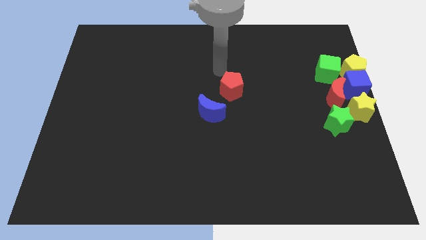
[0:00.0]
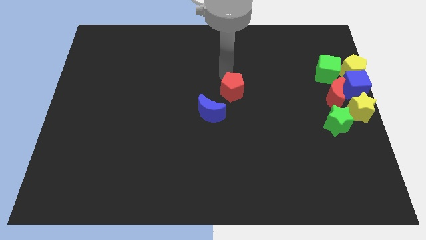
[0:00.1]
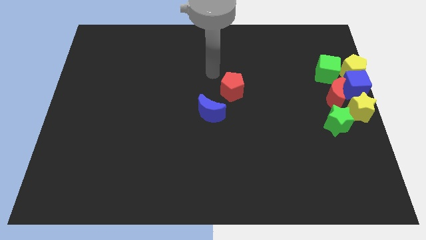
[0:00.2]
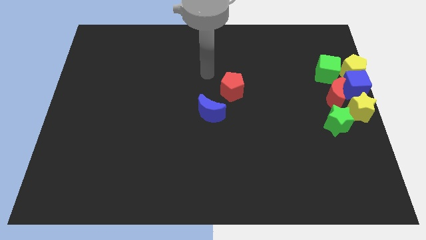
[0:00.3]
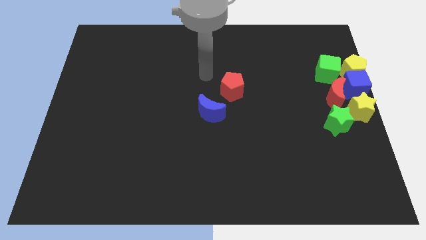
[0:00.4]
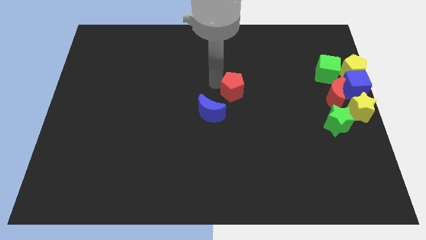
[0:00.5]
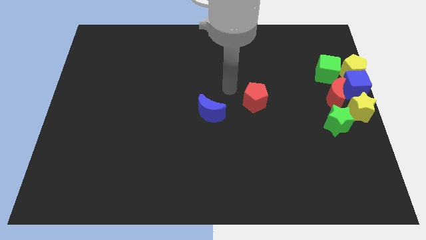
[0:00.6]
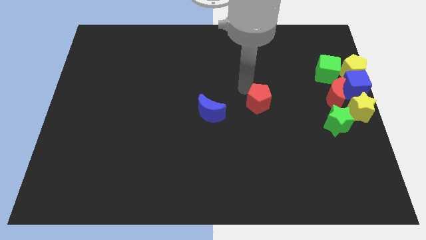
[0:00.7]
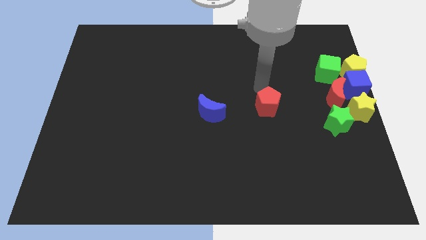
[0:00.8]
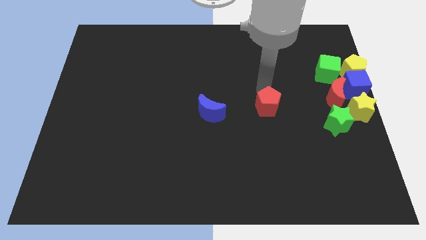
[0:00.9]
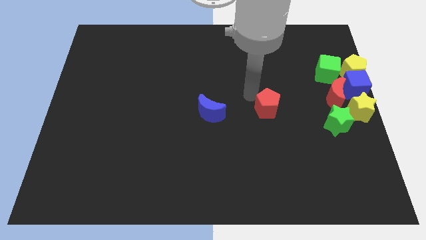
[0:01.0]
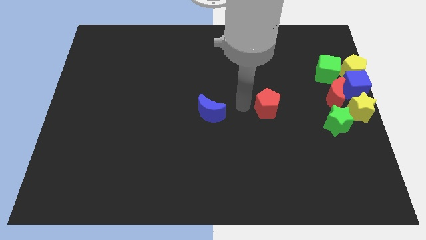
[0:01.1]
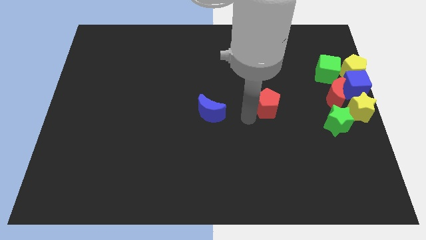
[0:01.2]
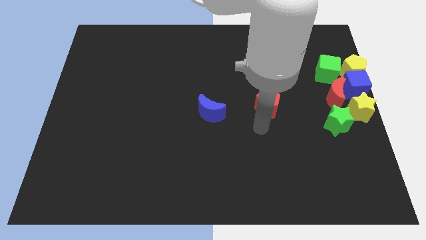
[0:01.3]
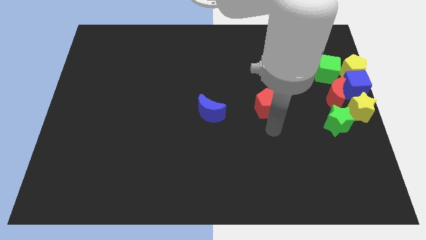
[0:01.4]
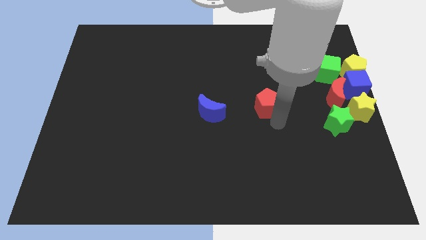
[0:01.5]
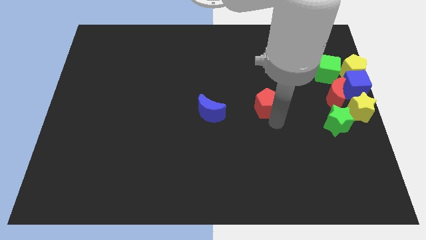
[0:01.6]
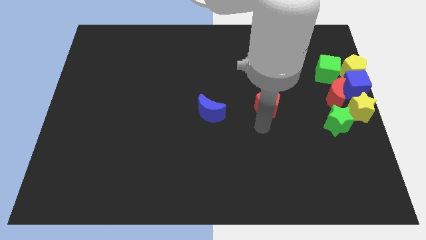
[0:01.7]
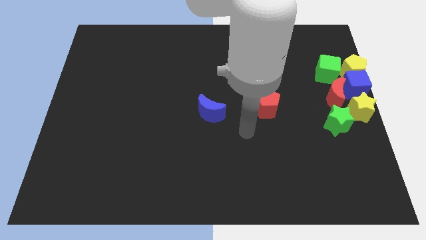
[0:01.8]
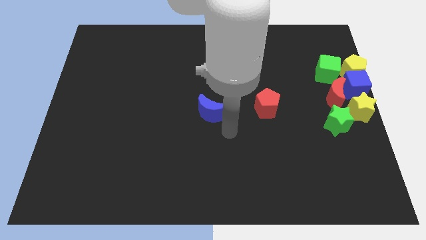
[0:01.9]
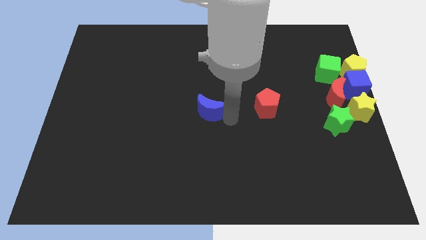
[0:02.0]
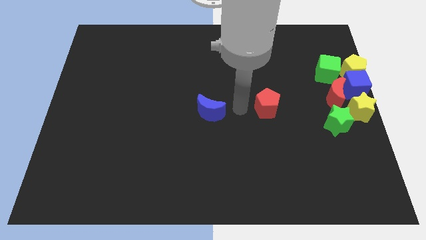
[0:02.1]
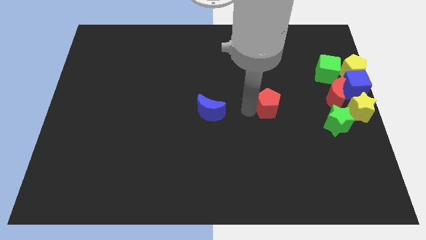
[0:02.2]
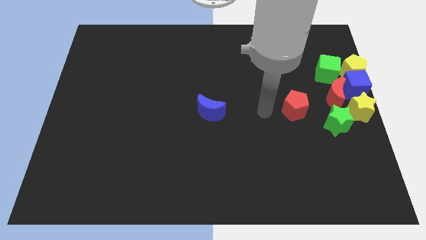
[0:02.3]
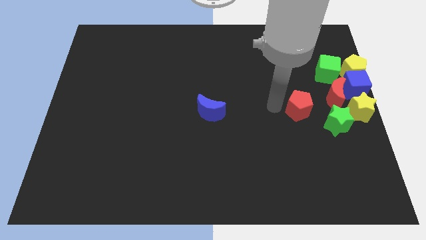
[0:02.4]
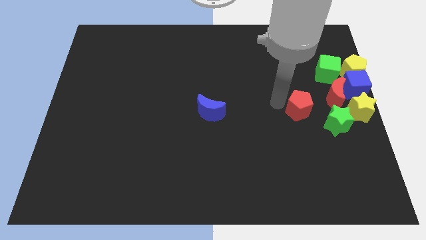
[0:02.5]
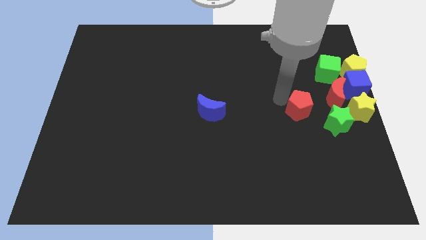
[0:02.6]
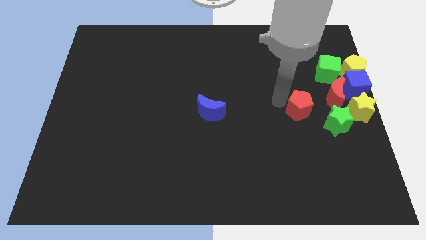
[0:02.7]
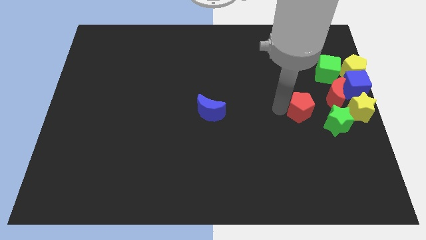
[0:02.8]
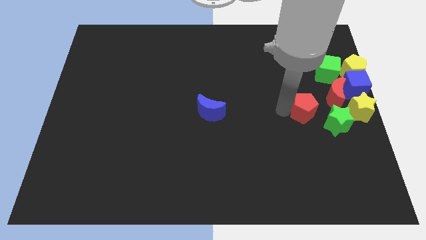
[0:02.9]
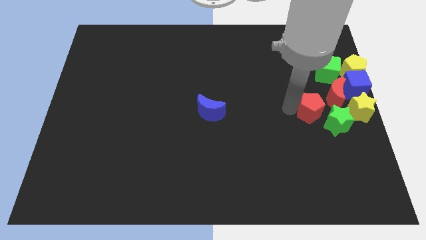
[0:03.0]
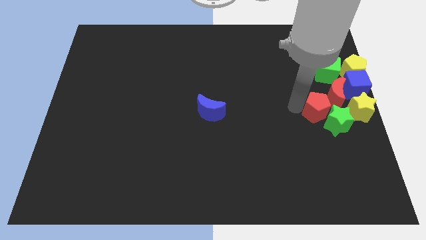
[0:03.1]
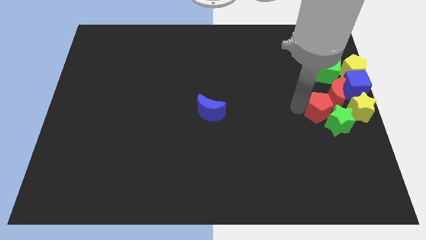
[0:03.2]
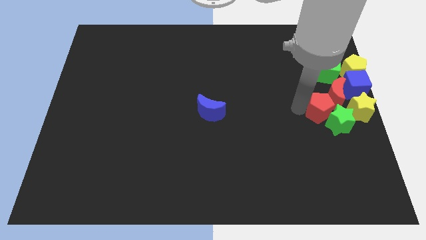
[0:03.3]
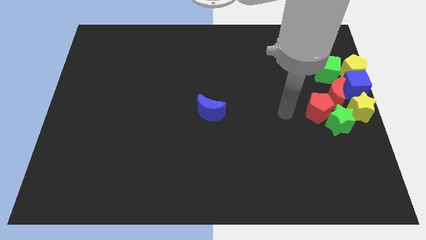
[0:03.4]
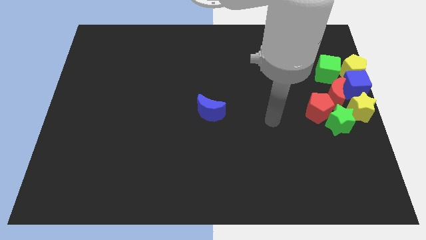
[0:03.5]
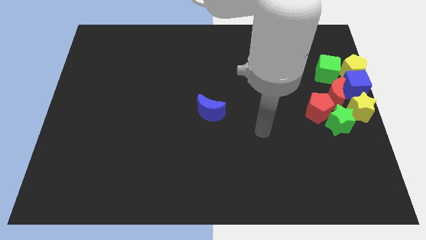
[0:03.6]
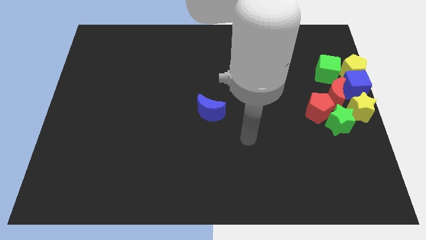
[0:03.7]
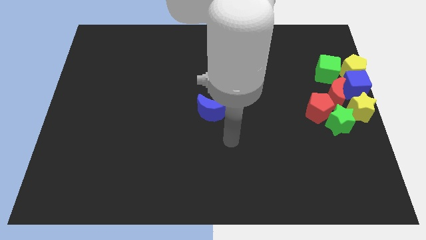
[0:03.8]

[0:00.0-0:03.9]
push the red pentagon to the group of blocks

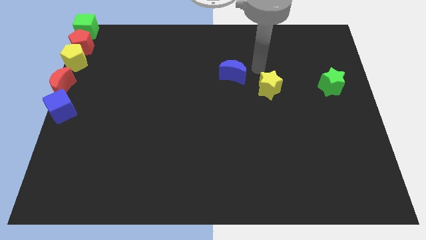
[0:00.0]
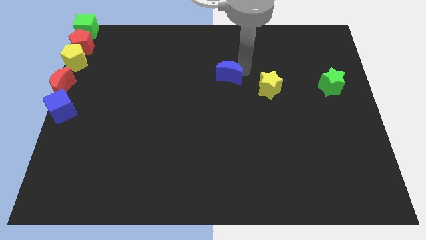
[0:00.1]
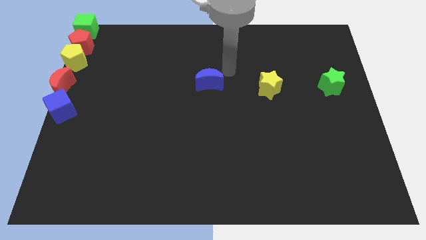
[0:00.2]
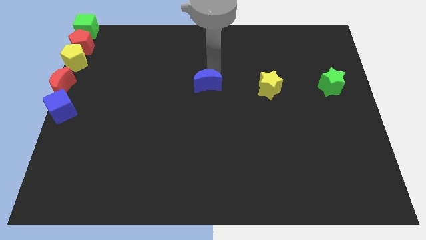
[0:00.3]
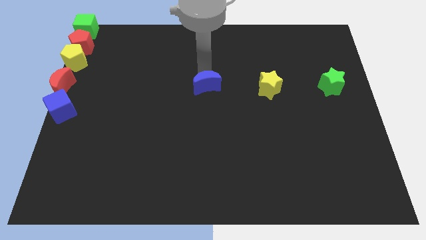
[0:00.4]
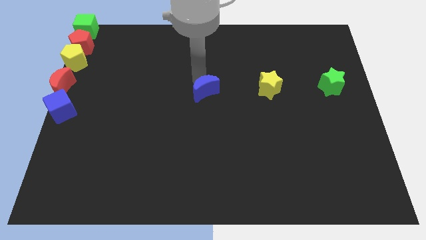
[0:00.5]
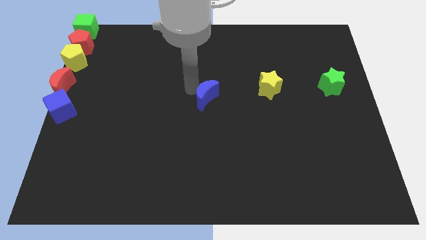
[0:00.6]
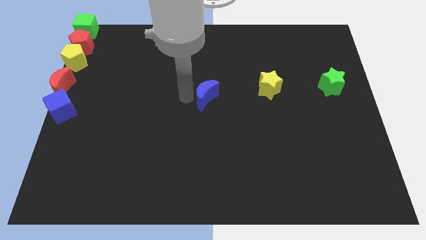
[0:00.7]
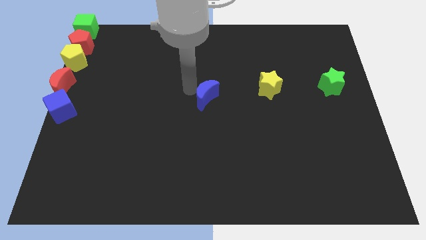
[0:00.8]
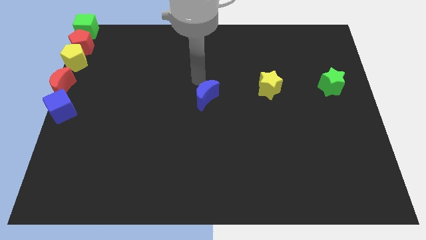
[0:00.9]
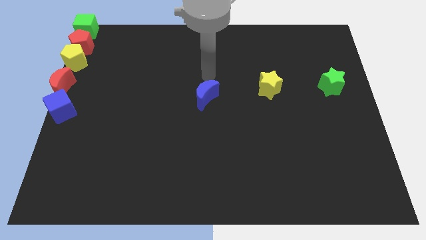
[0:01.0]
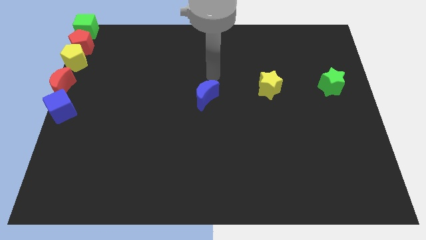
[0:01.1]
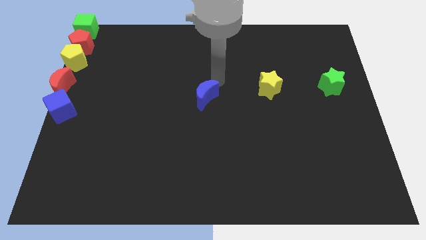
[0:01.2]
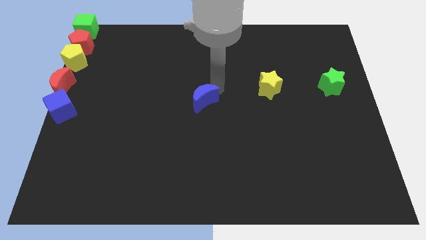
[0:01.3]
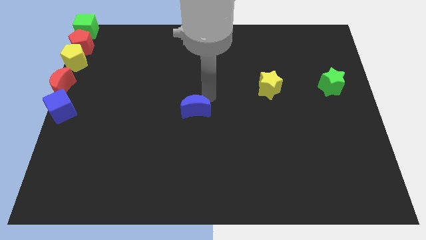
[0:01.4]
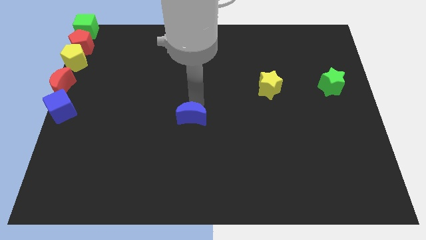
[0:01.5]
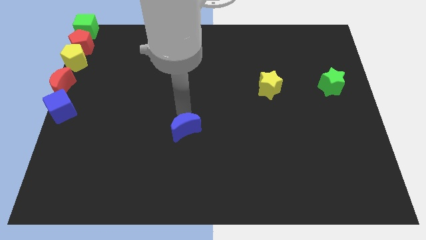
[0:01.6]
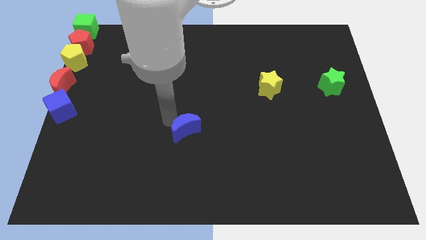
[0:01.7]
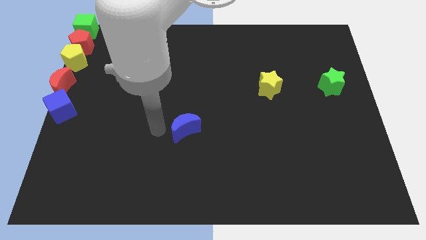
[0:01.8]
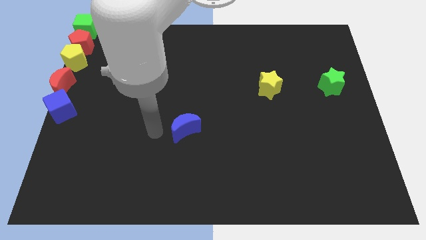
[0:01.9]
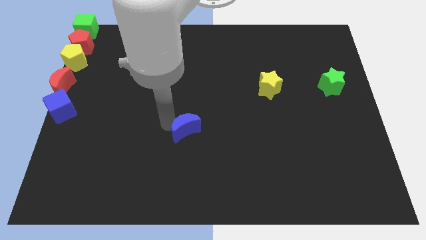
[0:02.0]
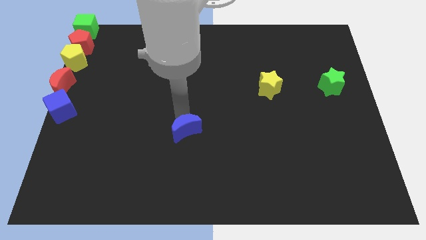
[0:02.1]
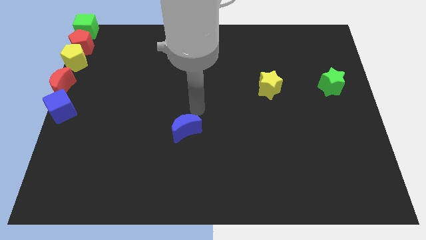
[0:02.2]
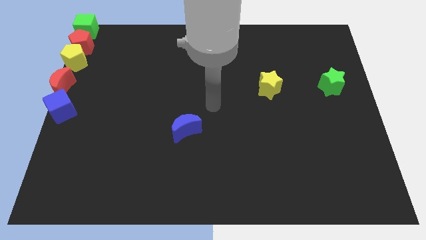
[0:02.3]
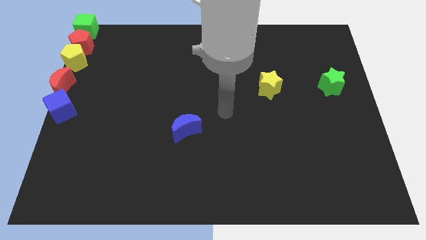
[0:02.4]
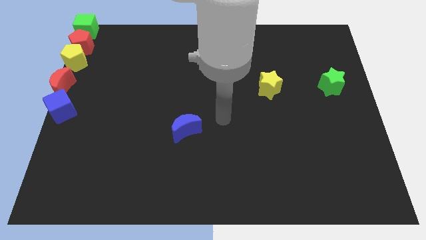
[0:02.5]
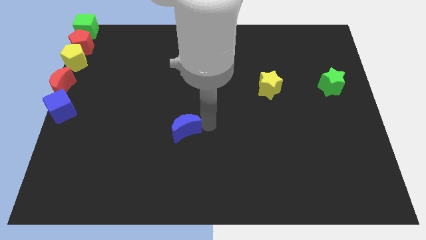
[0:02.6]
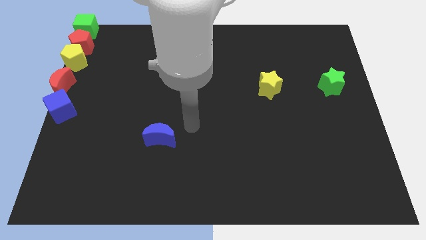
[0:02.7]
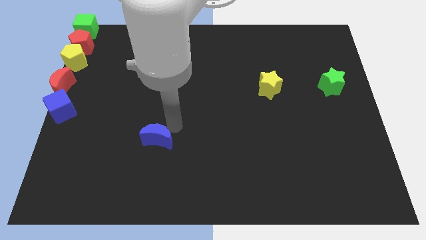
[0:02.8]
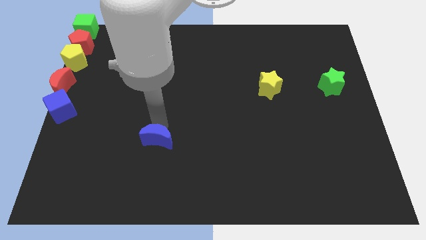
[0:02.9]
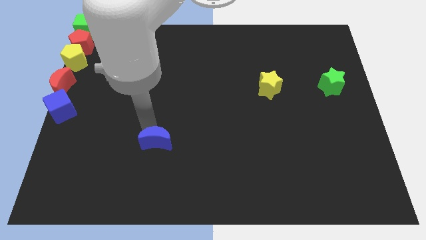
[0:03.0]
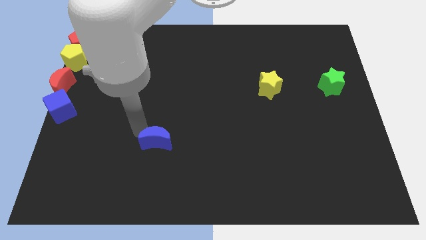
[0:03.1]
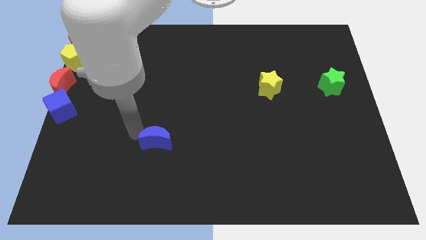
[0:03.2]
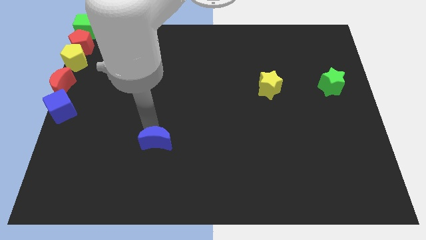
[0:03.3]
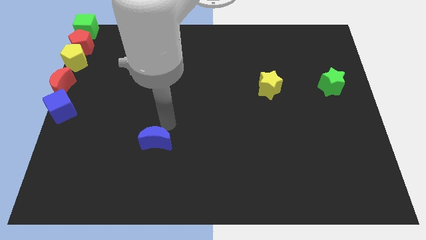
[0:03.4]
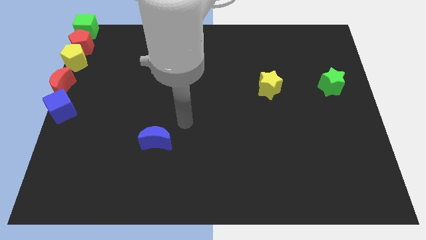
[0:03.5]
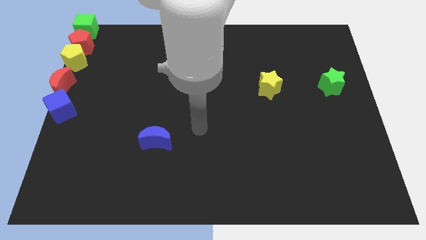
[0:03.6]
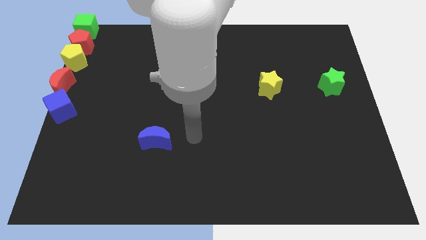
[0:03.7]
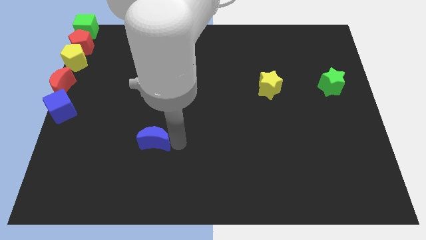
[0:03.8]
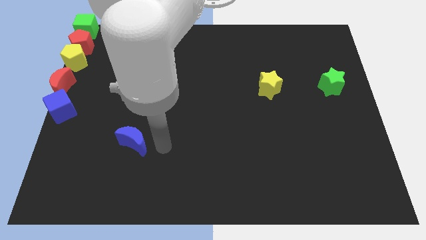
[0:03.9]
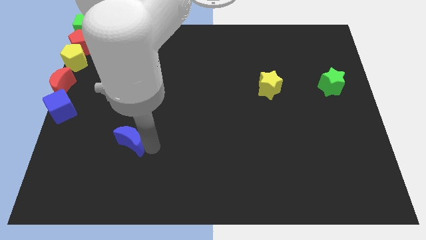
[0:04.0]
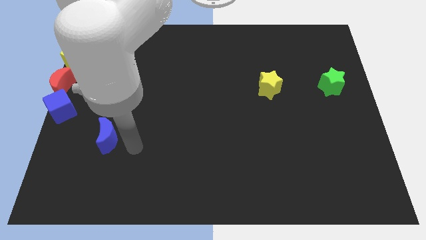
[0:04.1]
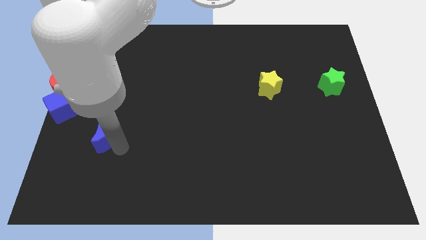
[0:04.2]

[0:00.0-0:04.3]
move the blue crescent diagonal to the bottom right of the blue cube

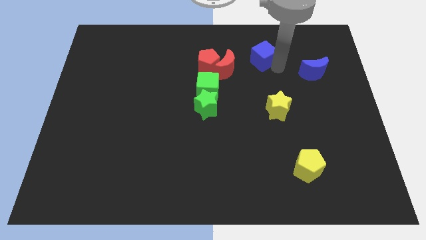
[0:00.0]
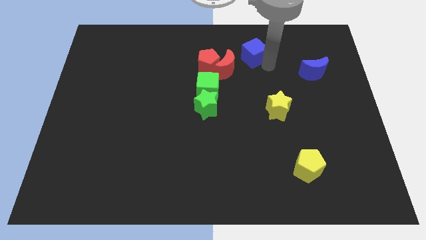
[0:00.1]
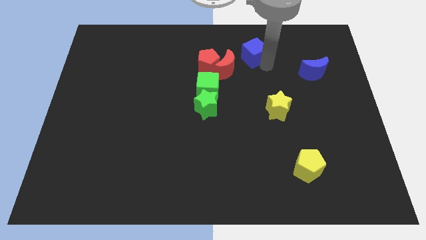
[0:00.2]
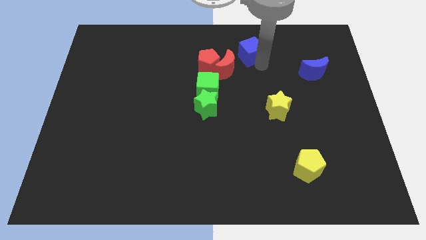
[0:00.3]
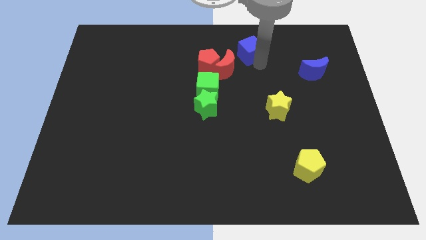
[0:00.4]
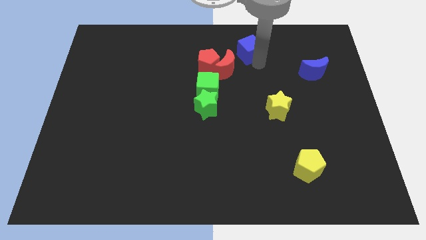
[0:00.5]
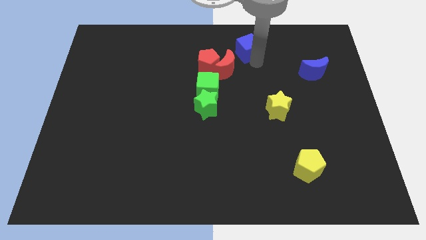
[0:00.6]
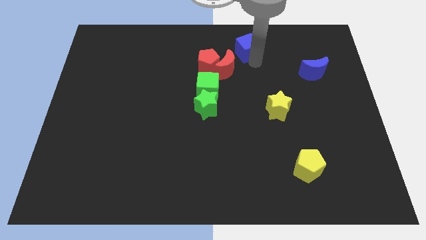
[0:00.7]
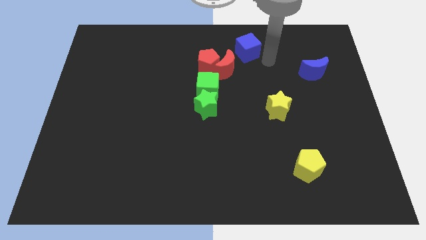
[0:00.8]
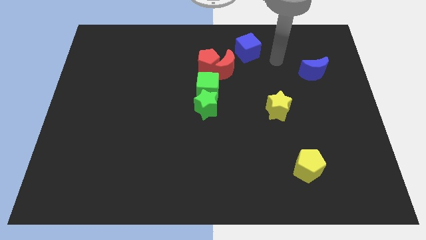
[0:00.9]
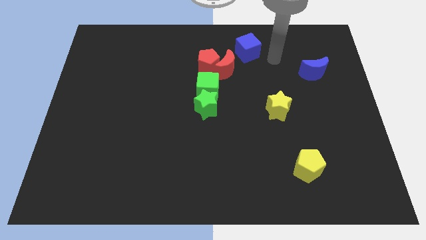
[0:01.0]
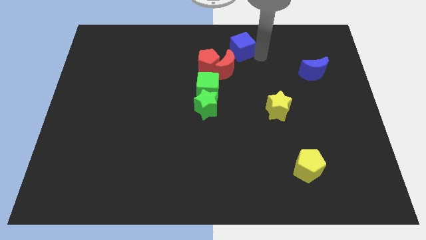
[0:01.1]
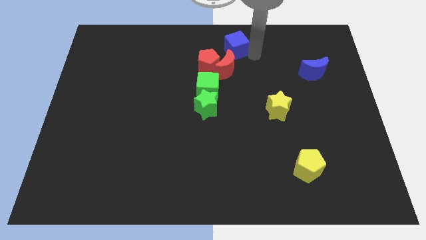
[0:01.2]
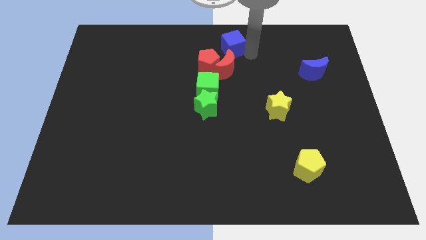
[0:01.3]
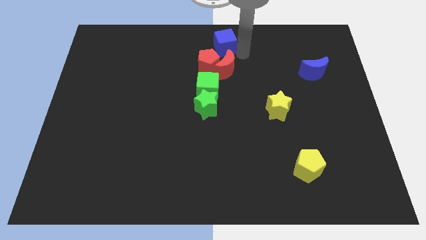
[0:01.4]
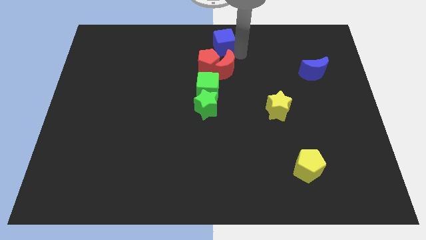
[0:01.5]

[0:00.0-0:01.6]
put the blue cube above the red crescent
